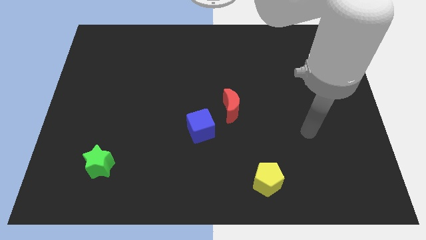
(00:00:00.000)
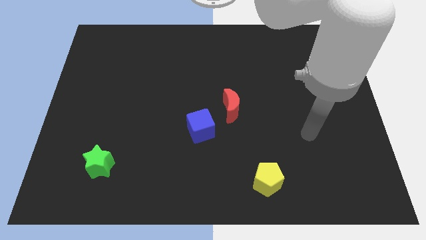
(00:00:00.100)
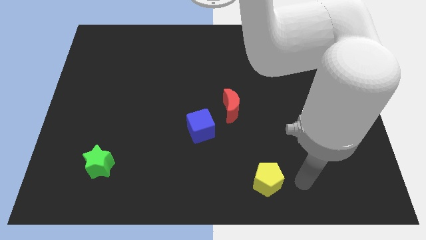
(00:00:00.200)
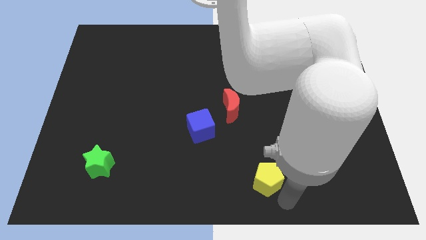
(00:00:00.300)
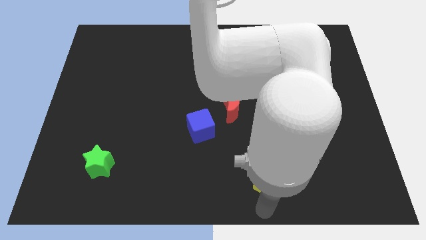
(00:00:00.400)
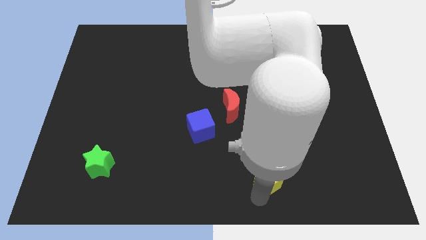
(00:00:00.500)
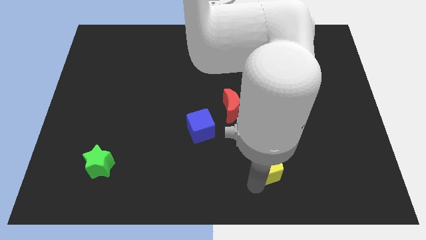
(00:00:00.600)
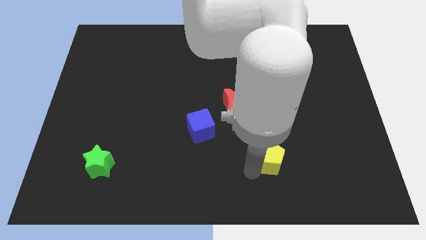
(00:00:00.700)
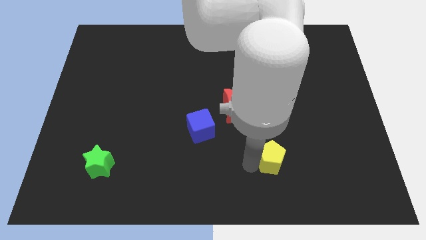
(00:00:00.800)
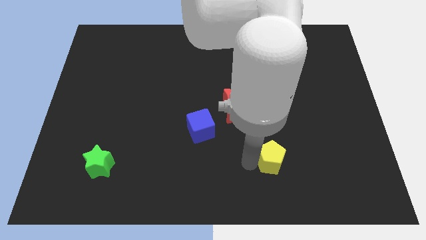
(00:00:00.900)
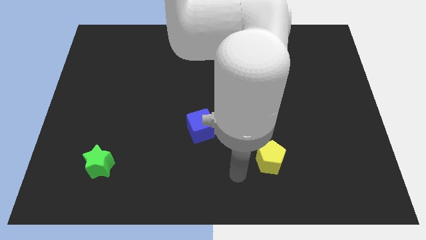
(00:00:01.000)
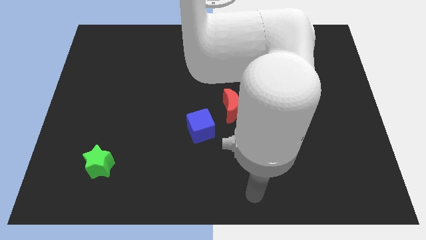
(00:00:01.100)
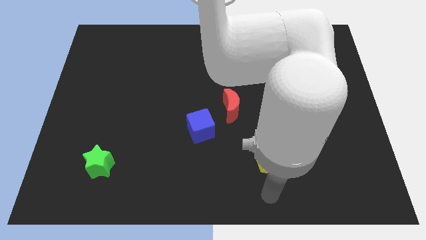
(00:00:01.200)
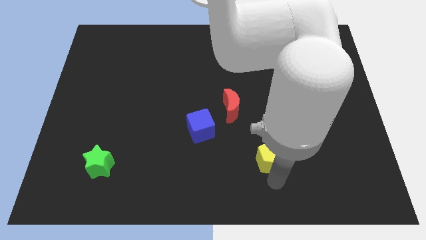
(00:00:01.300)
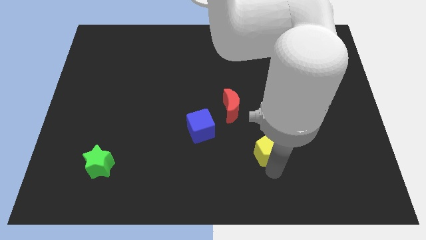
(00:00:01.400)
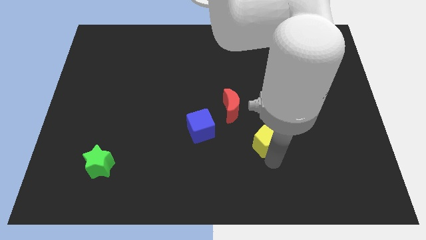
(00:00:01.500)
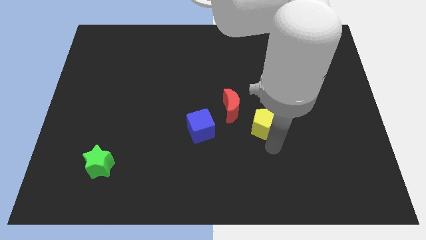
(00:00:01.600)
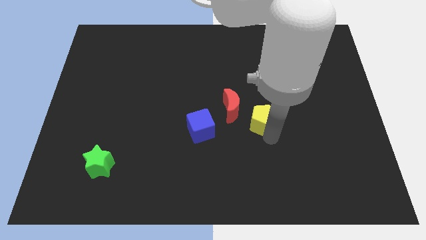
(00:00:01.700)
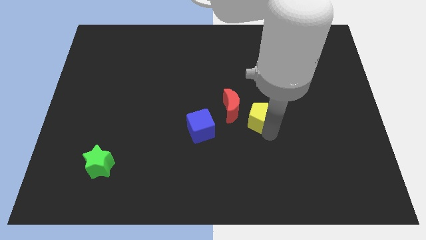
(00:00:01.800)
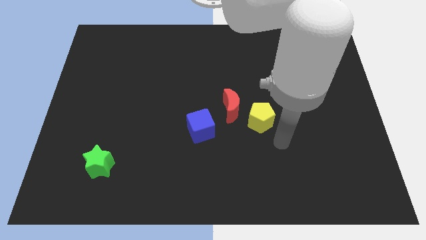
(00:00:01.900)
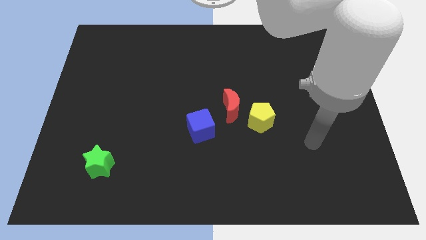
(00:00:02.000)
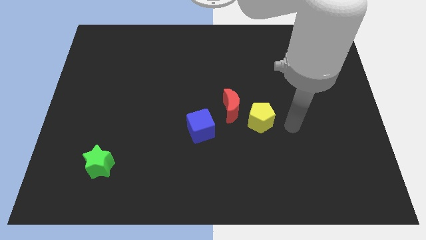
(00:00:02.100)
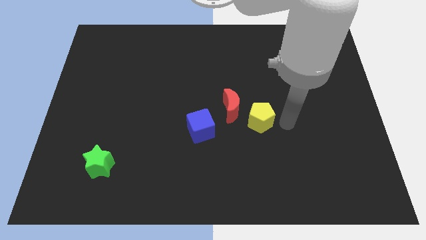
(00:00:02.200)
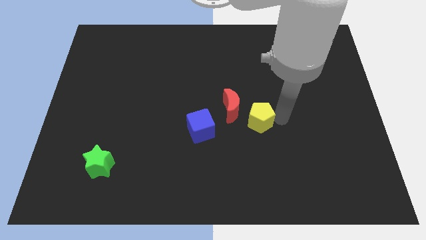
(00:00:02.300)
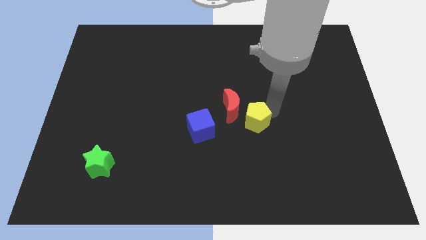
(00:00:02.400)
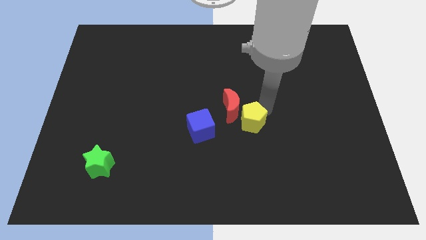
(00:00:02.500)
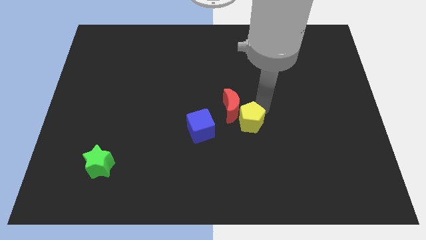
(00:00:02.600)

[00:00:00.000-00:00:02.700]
slide the yellow block next to the moon

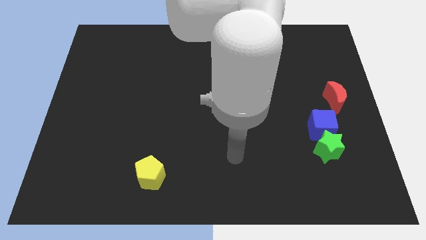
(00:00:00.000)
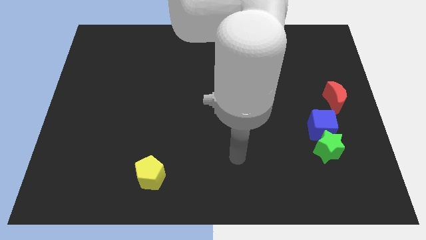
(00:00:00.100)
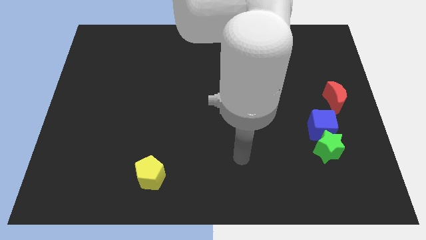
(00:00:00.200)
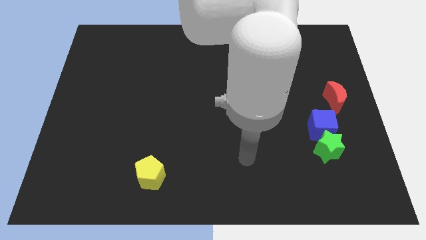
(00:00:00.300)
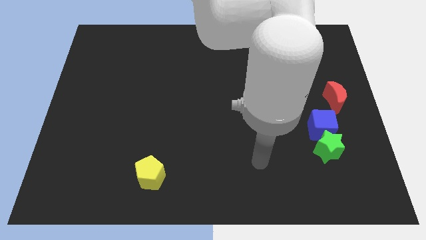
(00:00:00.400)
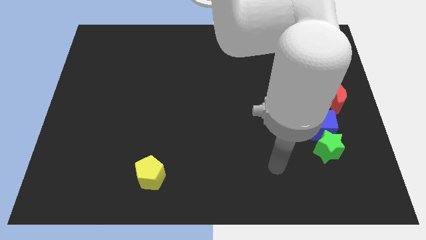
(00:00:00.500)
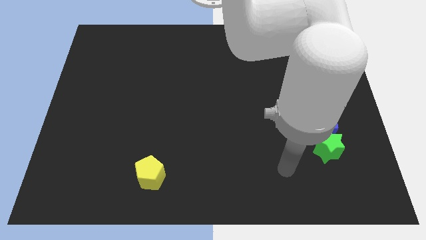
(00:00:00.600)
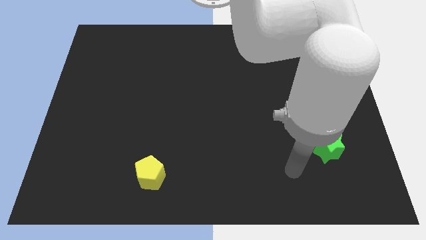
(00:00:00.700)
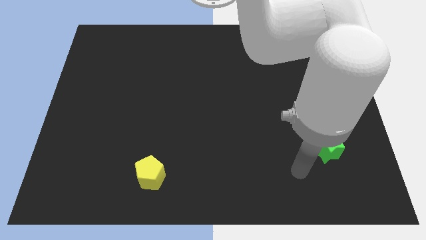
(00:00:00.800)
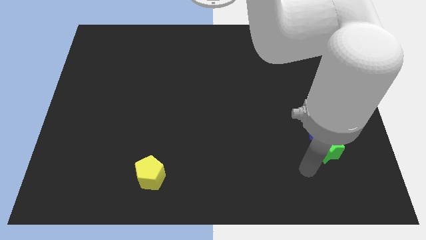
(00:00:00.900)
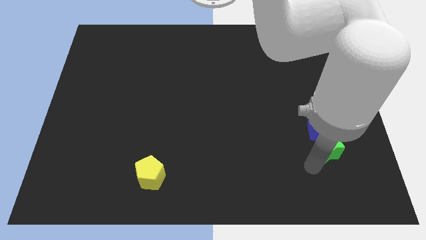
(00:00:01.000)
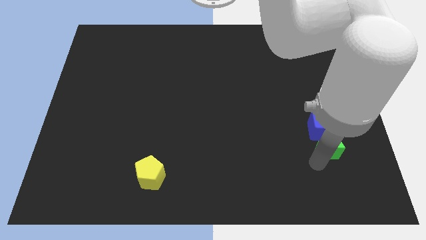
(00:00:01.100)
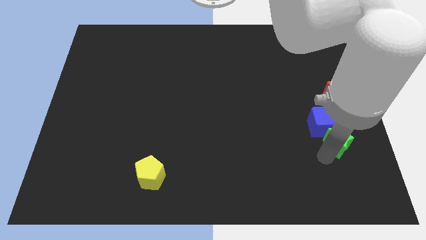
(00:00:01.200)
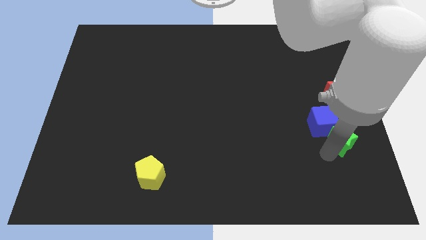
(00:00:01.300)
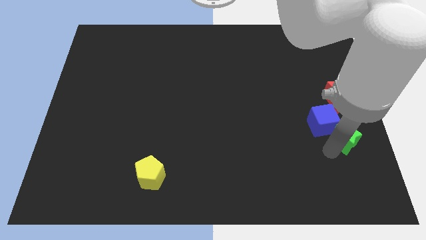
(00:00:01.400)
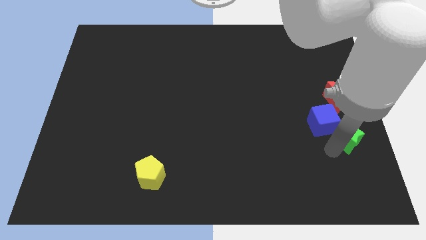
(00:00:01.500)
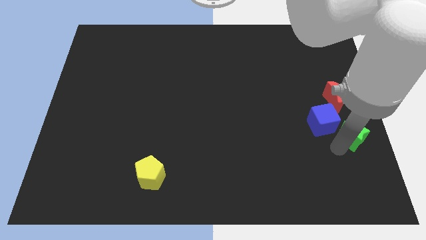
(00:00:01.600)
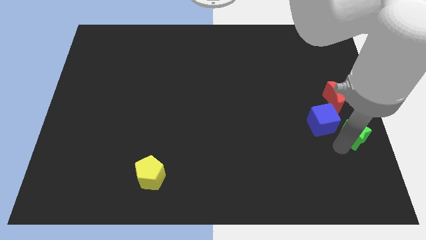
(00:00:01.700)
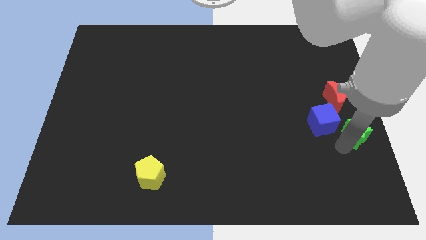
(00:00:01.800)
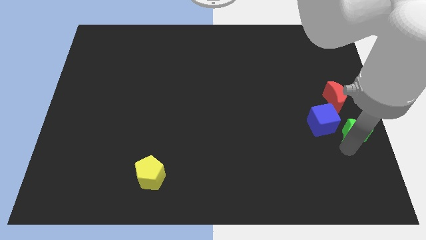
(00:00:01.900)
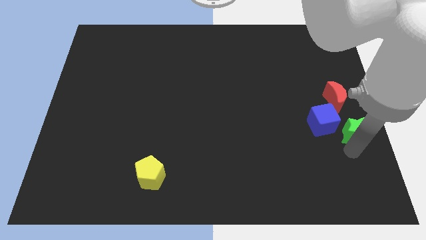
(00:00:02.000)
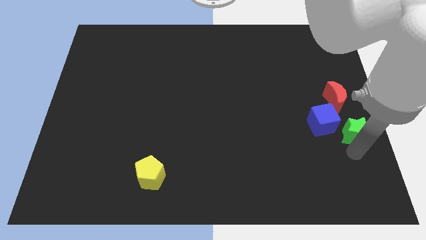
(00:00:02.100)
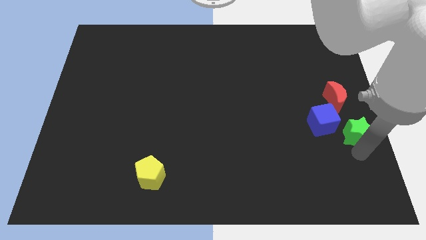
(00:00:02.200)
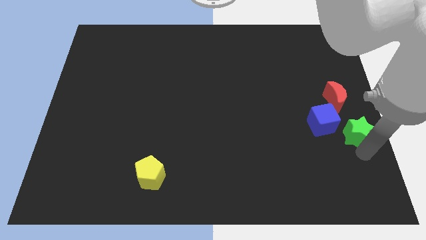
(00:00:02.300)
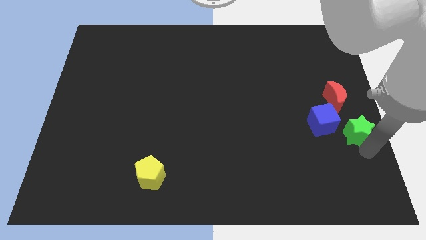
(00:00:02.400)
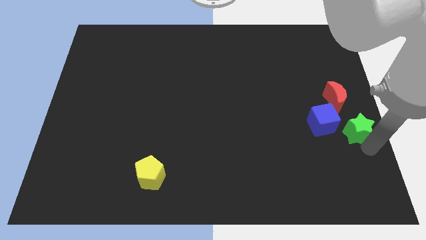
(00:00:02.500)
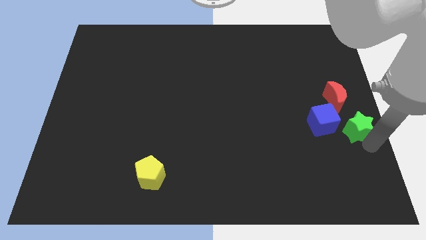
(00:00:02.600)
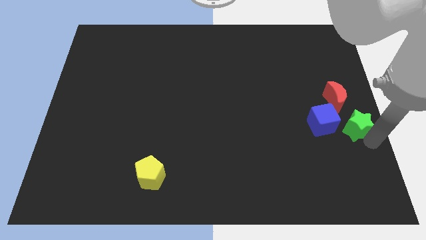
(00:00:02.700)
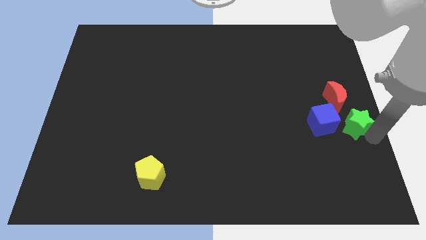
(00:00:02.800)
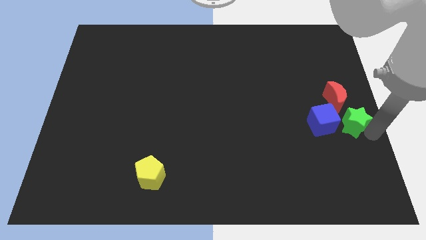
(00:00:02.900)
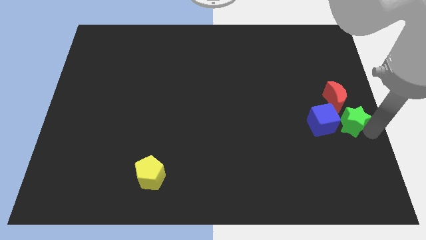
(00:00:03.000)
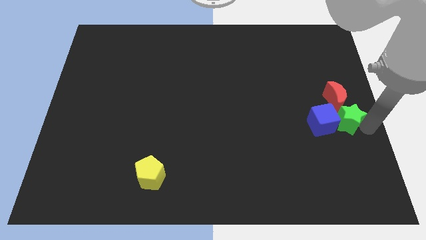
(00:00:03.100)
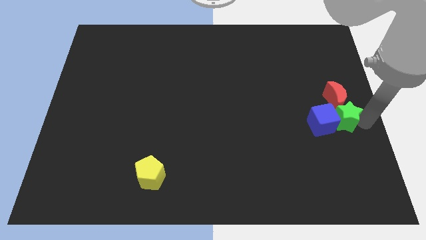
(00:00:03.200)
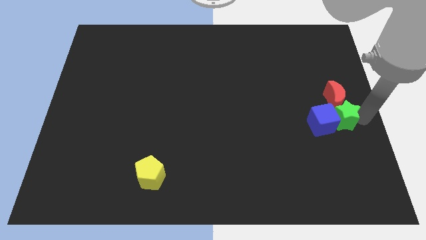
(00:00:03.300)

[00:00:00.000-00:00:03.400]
put the star close to the red block

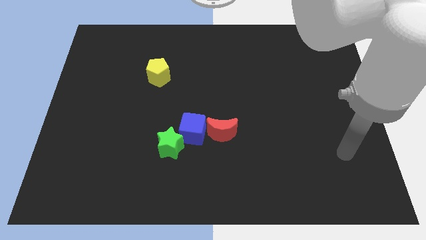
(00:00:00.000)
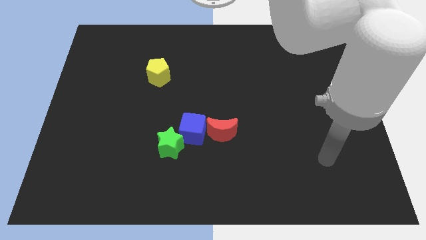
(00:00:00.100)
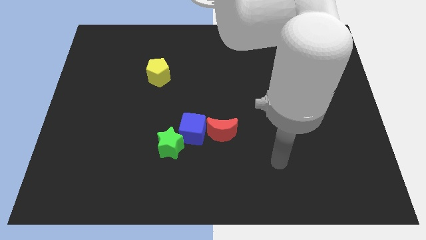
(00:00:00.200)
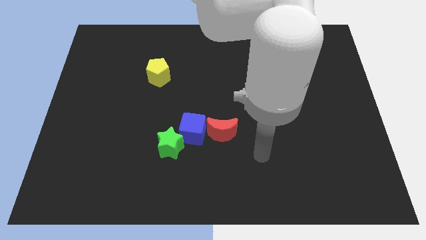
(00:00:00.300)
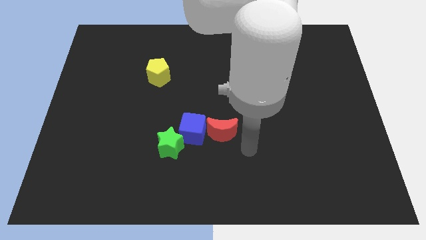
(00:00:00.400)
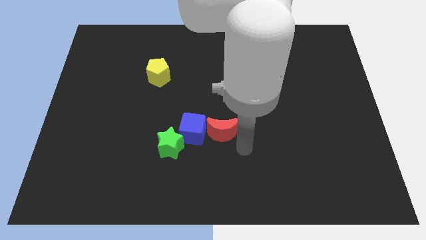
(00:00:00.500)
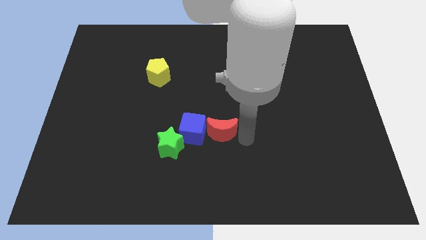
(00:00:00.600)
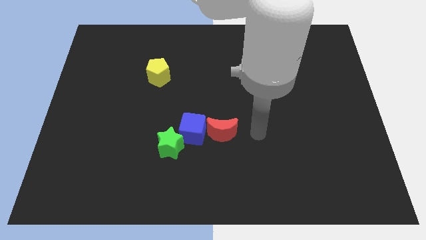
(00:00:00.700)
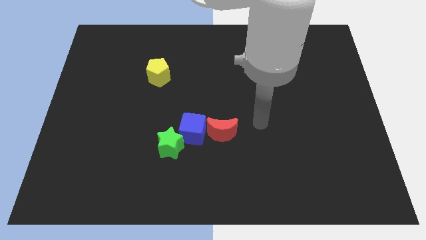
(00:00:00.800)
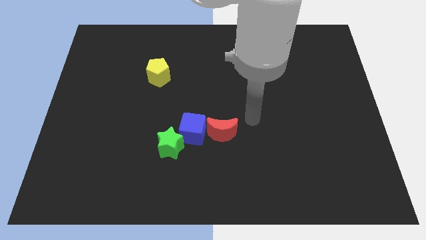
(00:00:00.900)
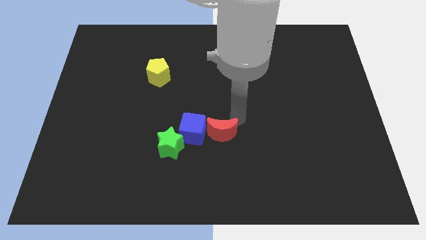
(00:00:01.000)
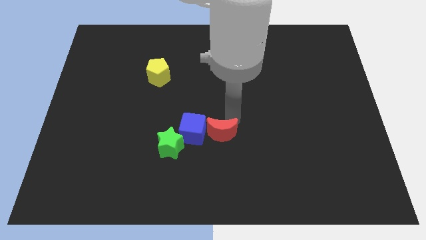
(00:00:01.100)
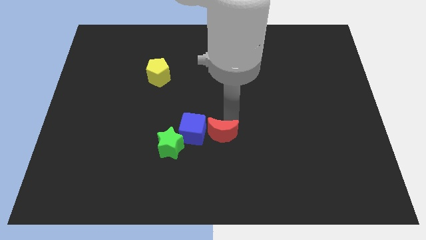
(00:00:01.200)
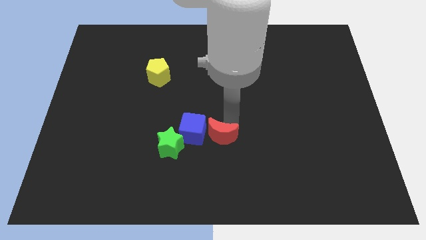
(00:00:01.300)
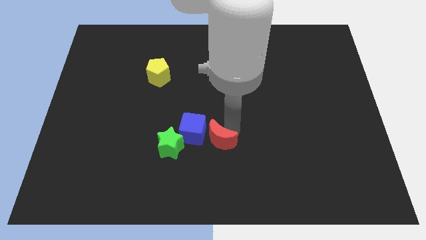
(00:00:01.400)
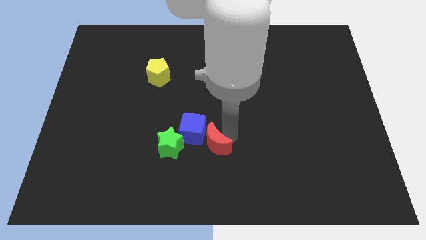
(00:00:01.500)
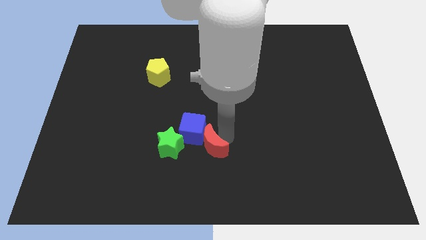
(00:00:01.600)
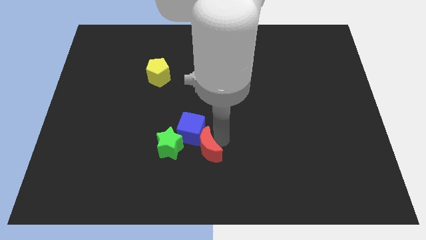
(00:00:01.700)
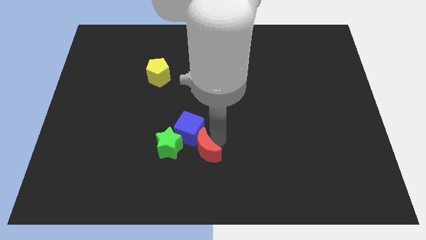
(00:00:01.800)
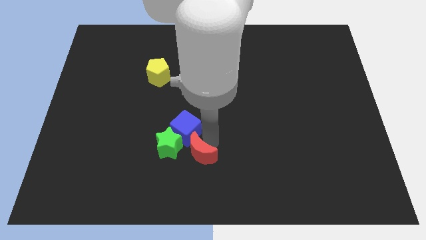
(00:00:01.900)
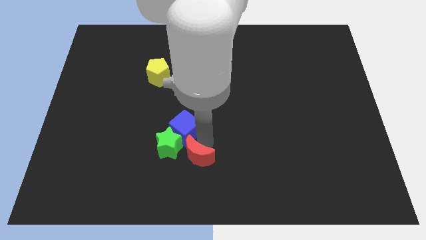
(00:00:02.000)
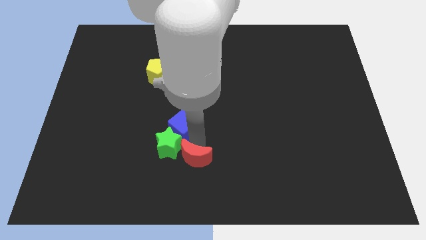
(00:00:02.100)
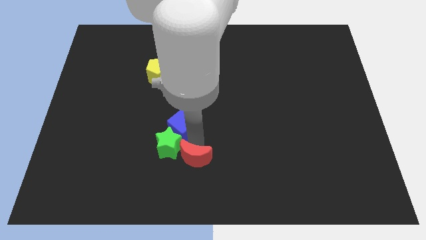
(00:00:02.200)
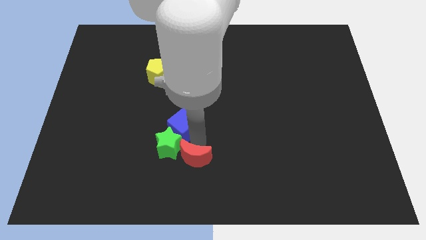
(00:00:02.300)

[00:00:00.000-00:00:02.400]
put the red block towards the green star

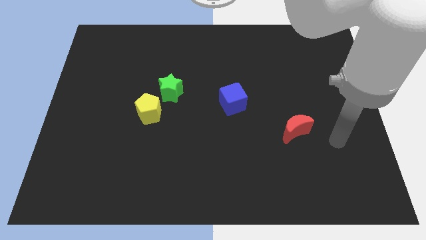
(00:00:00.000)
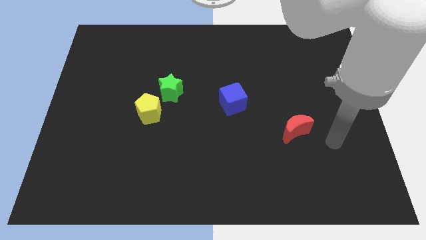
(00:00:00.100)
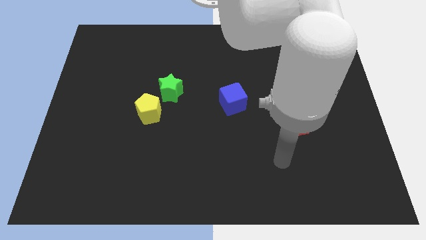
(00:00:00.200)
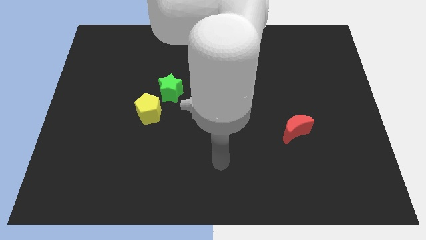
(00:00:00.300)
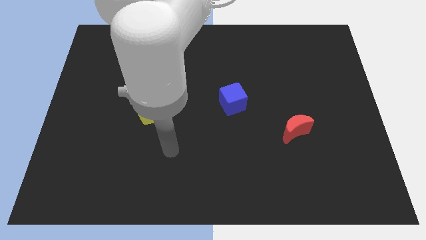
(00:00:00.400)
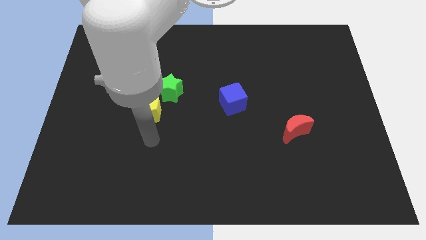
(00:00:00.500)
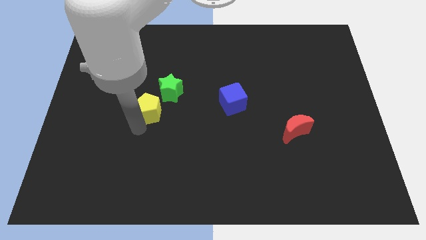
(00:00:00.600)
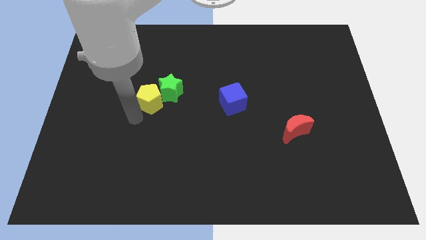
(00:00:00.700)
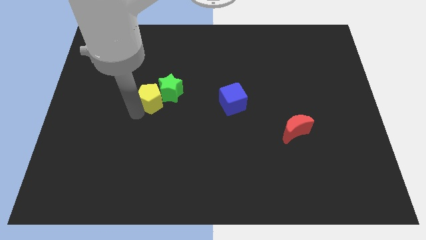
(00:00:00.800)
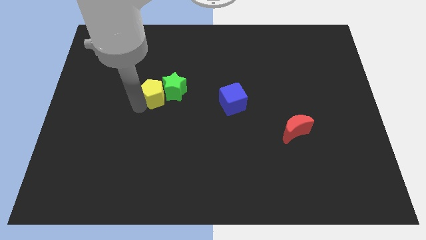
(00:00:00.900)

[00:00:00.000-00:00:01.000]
push the pentagon to the green star
